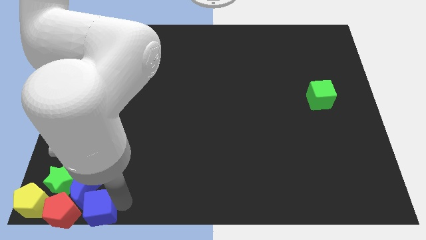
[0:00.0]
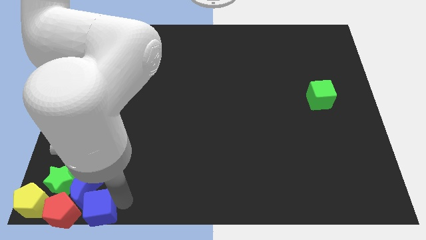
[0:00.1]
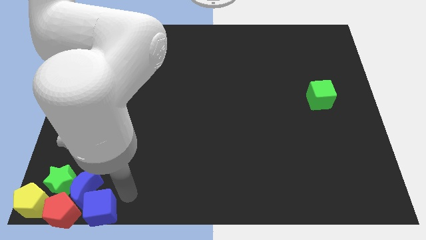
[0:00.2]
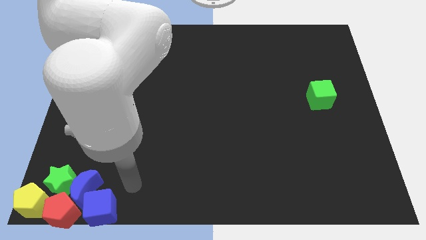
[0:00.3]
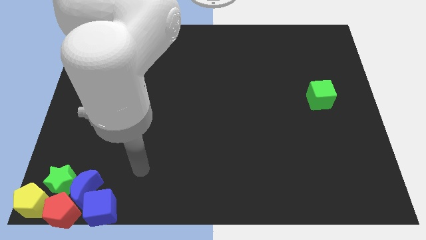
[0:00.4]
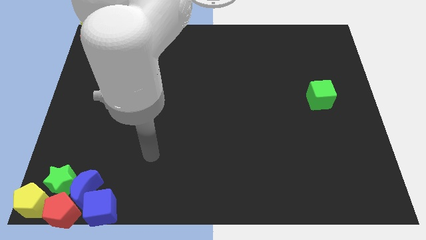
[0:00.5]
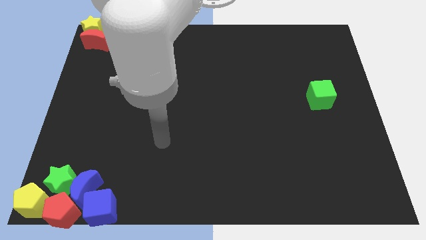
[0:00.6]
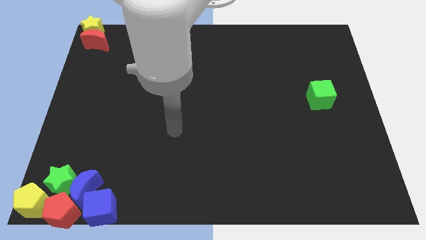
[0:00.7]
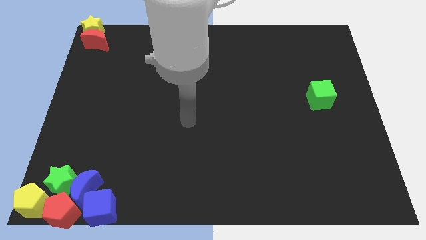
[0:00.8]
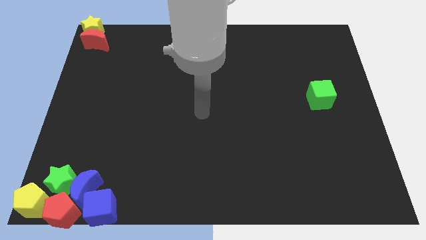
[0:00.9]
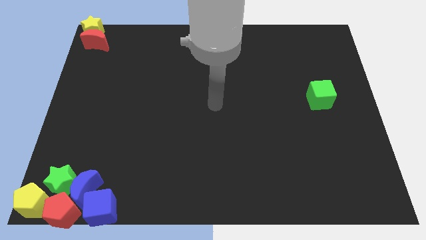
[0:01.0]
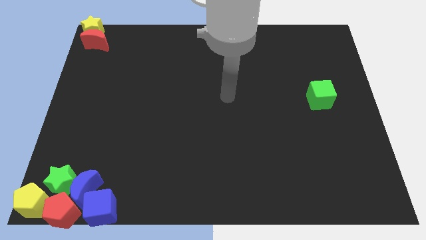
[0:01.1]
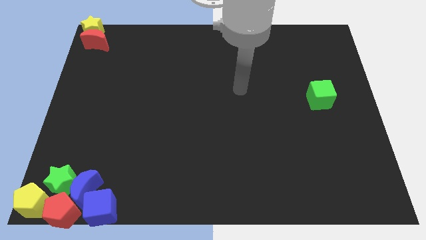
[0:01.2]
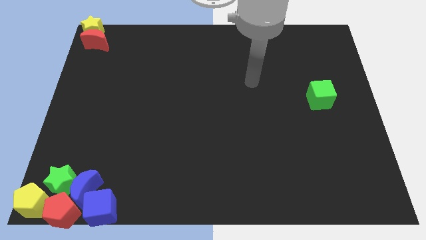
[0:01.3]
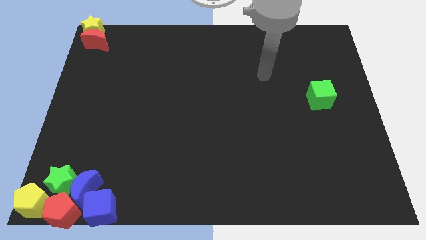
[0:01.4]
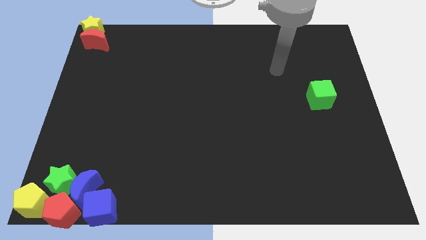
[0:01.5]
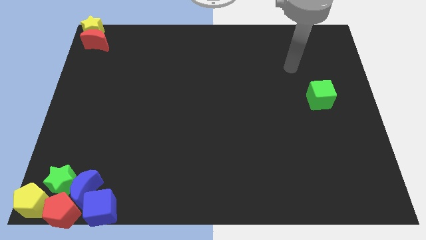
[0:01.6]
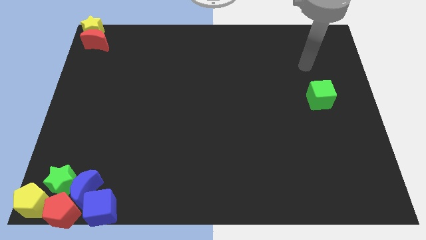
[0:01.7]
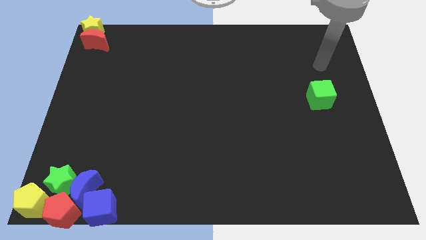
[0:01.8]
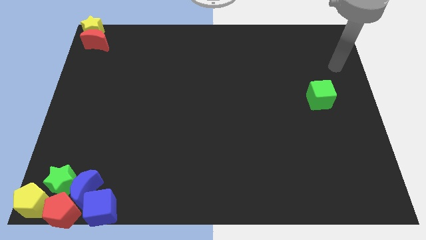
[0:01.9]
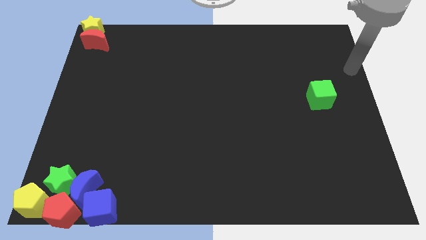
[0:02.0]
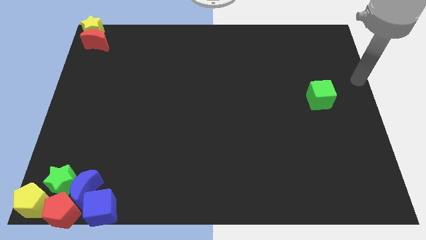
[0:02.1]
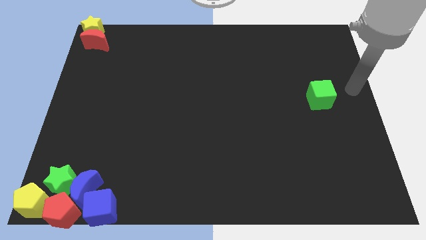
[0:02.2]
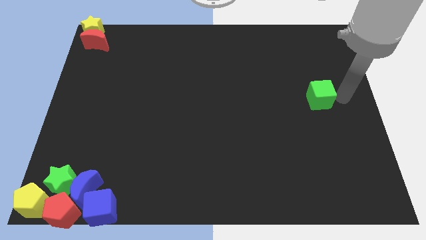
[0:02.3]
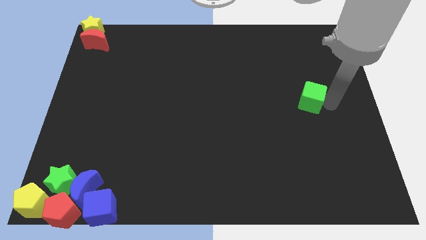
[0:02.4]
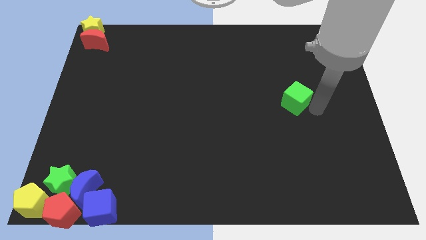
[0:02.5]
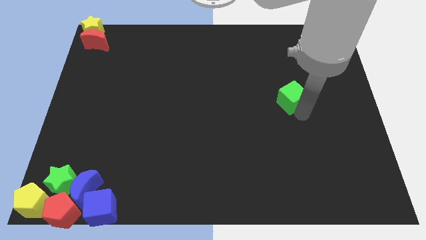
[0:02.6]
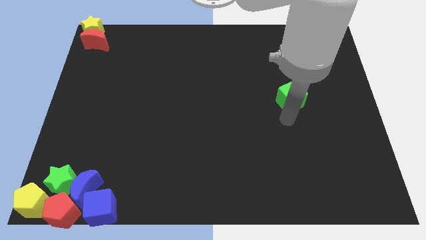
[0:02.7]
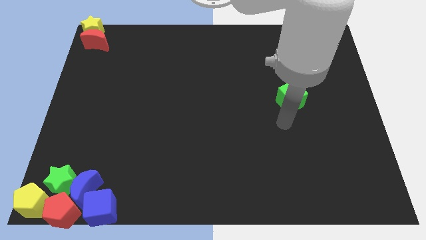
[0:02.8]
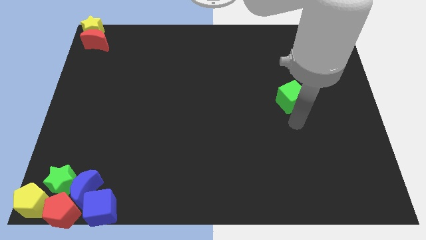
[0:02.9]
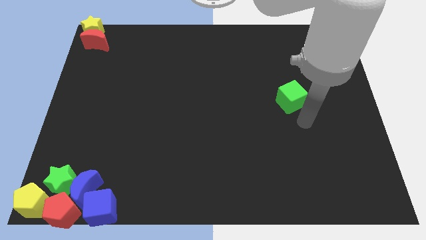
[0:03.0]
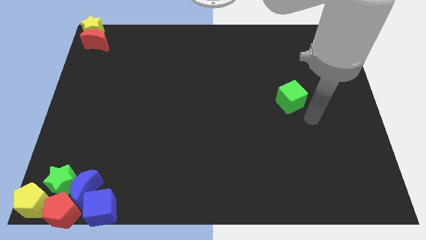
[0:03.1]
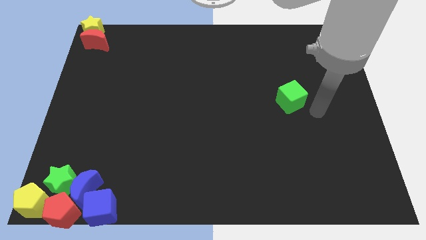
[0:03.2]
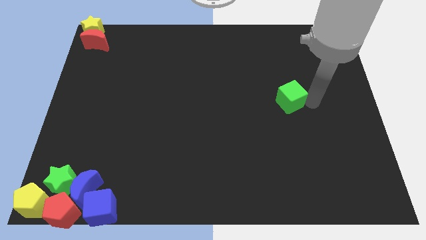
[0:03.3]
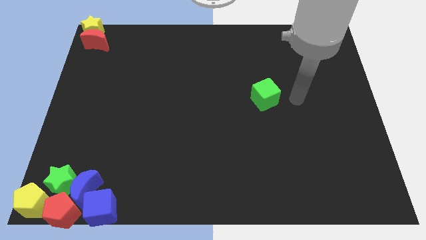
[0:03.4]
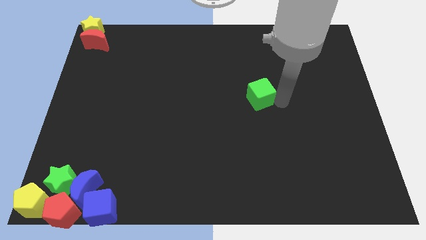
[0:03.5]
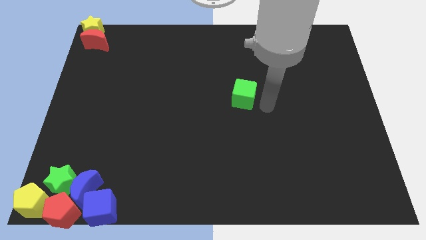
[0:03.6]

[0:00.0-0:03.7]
slide the green cube to the center of the board

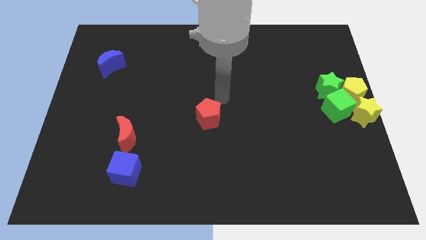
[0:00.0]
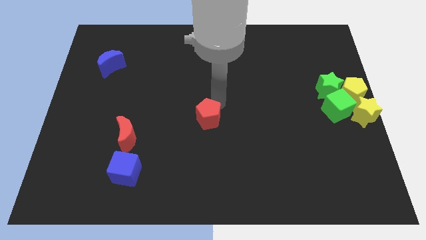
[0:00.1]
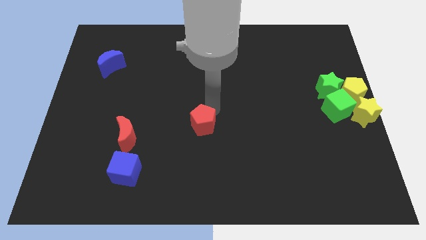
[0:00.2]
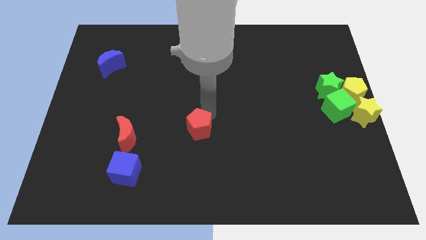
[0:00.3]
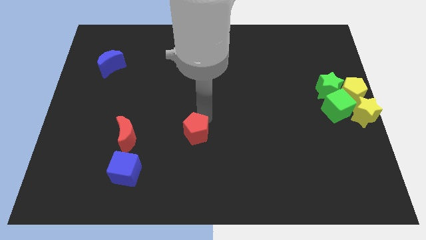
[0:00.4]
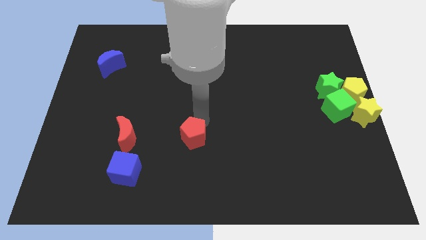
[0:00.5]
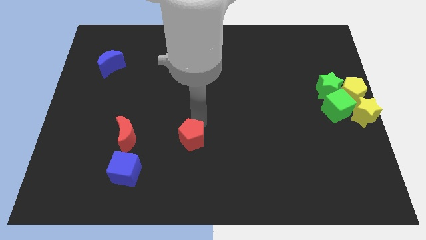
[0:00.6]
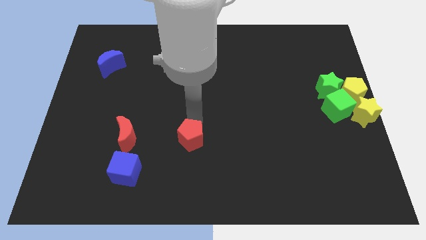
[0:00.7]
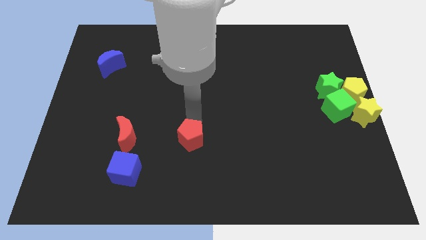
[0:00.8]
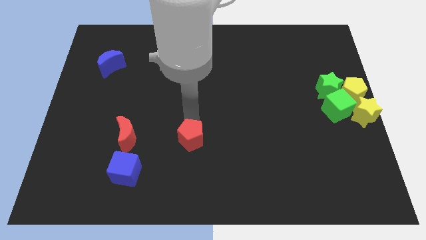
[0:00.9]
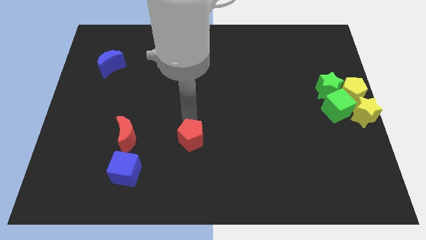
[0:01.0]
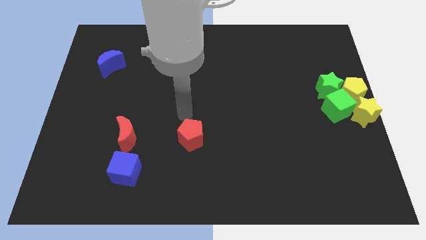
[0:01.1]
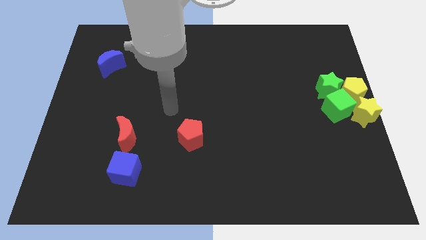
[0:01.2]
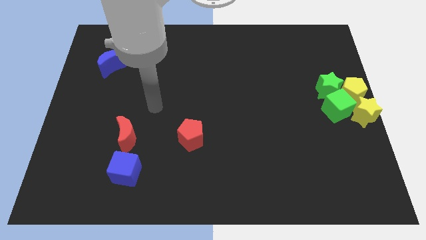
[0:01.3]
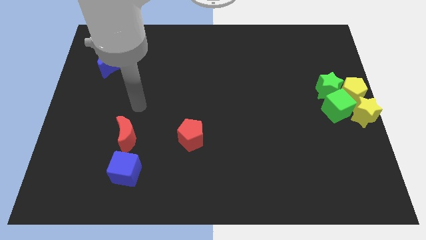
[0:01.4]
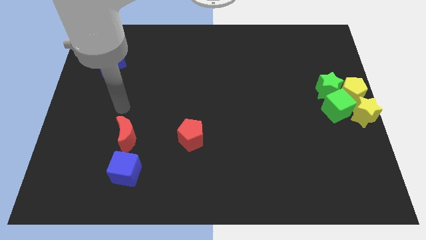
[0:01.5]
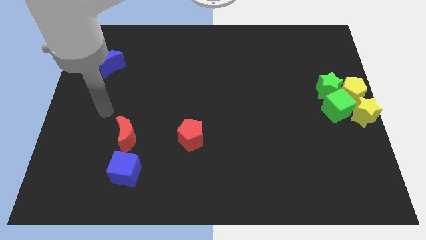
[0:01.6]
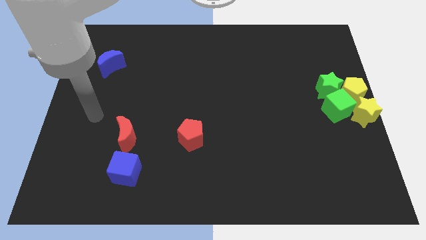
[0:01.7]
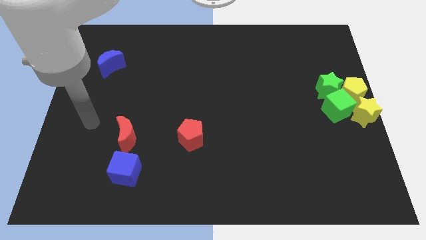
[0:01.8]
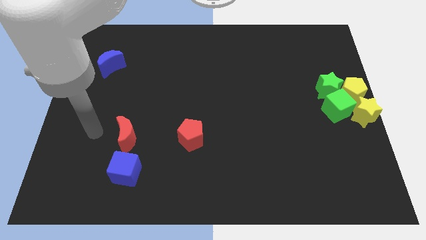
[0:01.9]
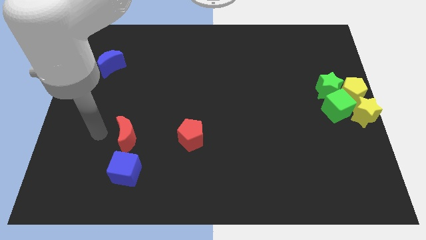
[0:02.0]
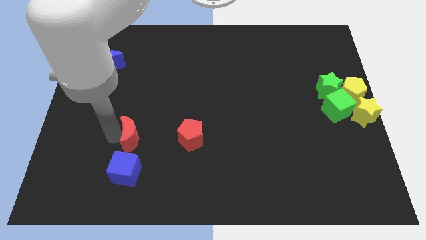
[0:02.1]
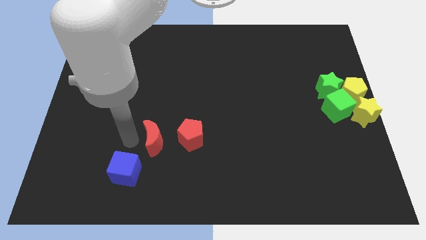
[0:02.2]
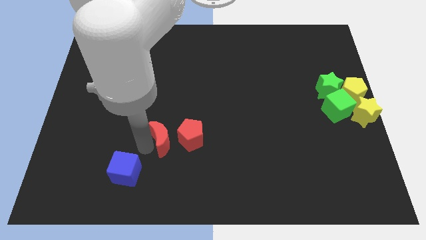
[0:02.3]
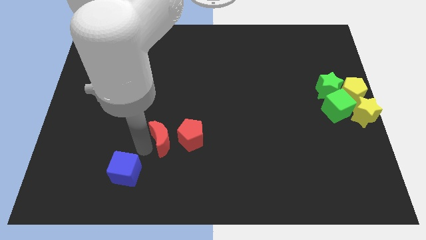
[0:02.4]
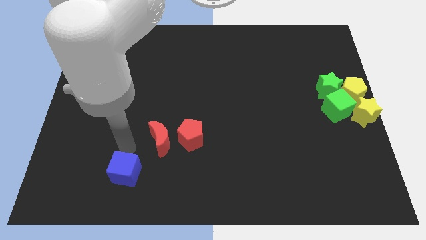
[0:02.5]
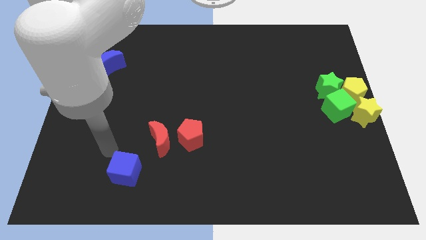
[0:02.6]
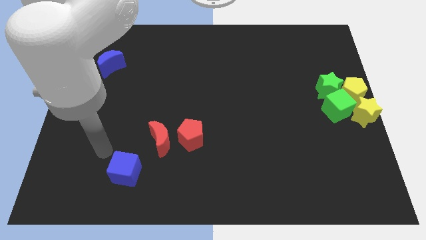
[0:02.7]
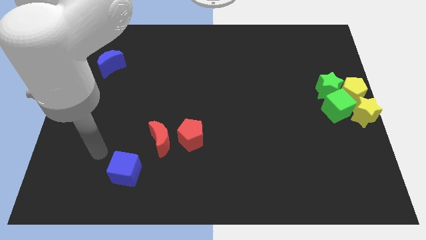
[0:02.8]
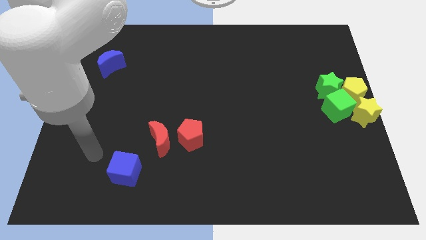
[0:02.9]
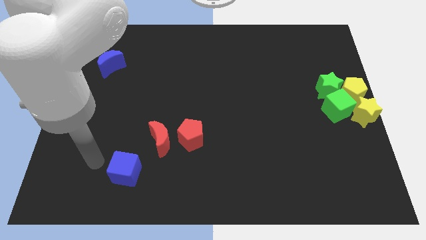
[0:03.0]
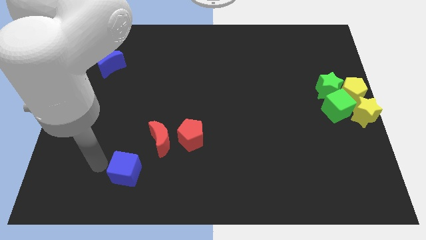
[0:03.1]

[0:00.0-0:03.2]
move the red crescent parallel to the red pentagon

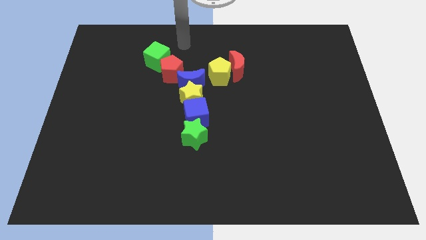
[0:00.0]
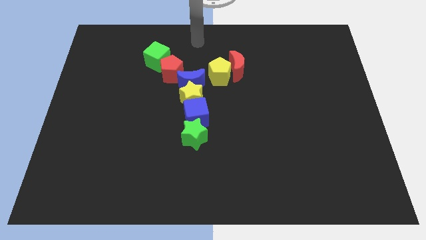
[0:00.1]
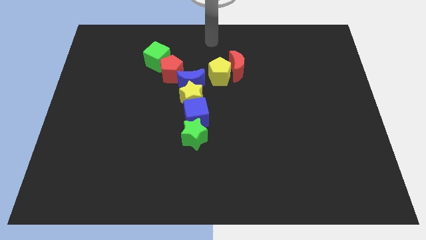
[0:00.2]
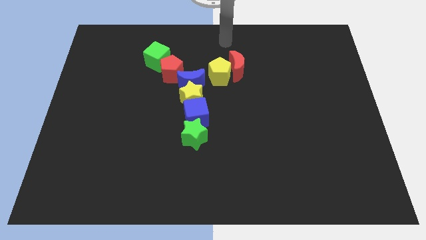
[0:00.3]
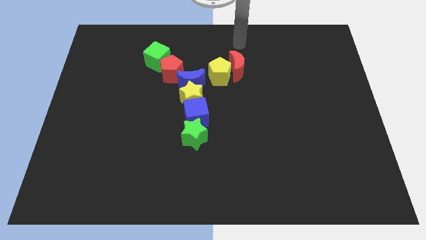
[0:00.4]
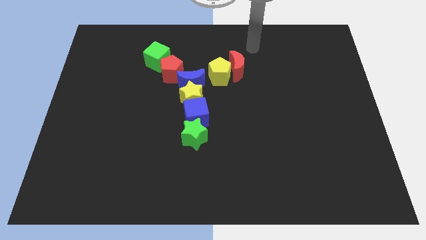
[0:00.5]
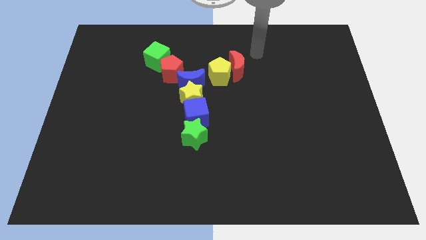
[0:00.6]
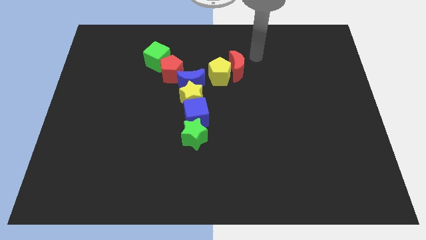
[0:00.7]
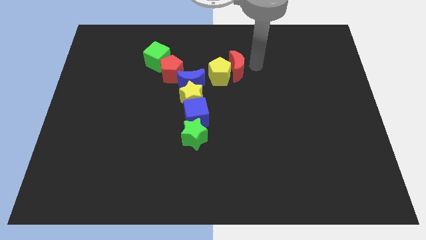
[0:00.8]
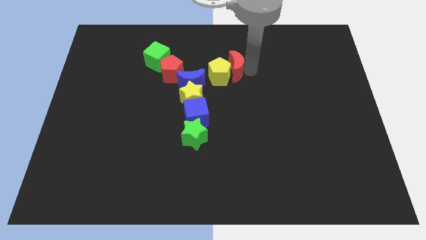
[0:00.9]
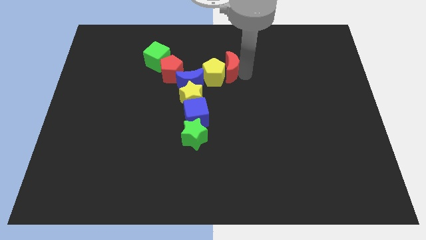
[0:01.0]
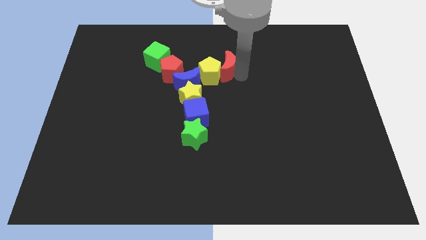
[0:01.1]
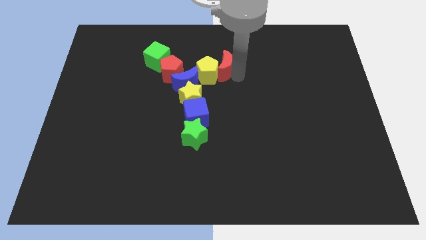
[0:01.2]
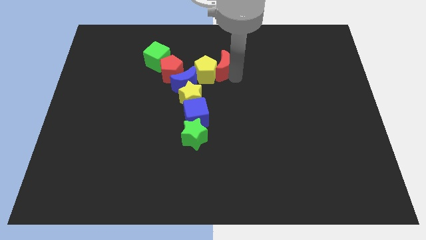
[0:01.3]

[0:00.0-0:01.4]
push the yellow pentagon into the right side of the blue crescent

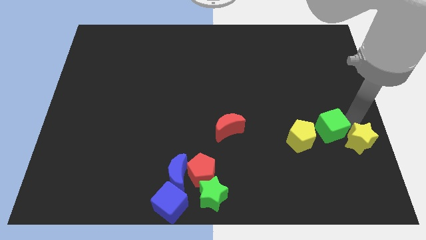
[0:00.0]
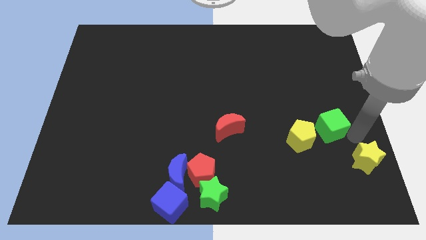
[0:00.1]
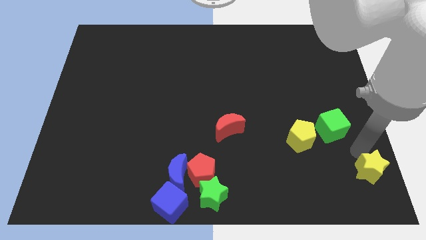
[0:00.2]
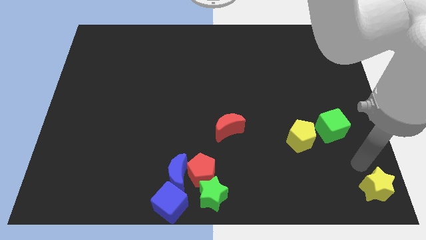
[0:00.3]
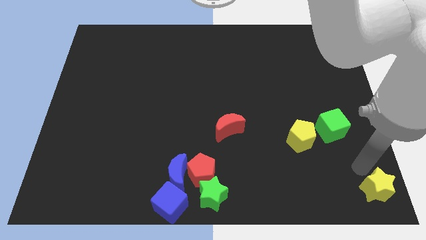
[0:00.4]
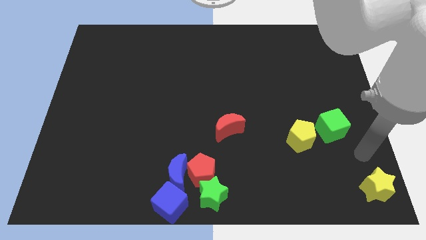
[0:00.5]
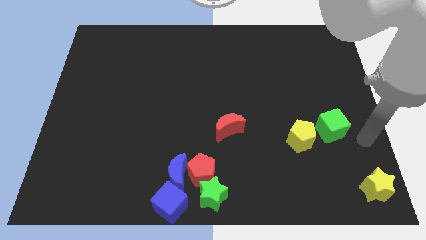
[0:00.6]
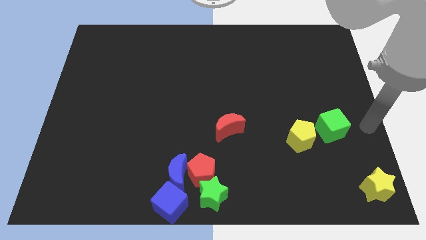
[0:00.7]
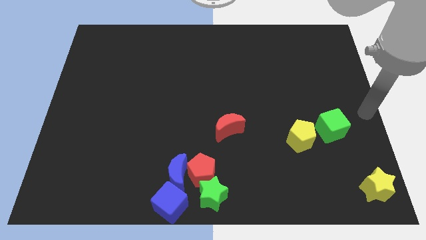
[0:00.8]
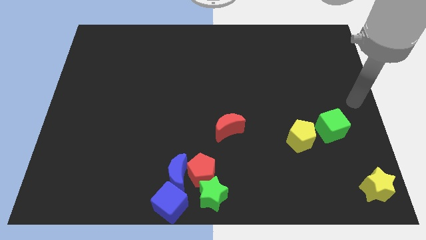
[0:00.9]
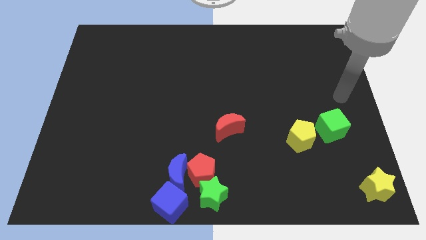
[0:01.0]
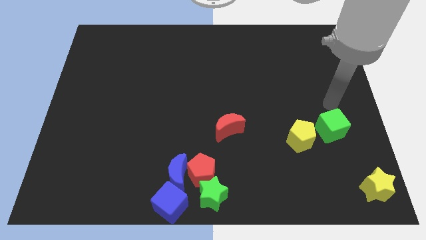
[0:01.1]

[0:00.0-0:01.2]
move your arm to the green cube
